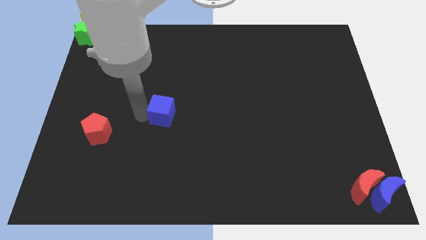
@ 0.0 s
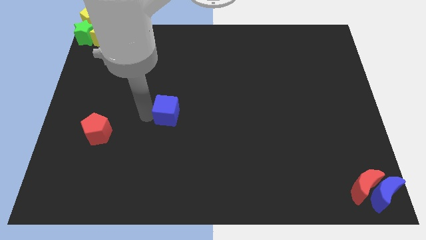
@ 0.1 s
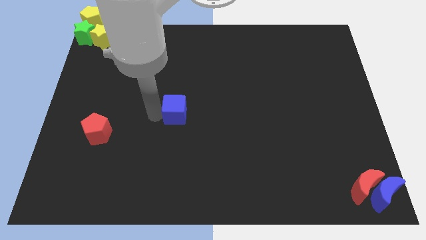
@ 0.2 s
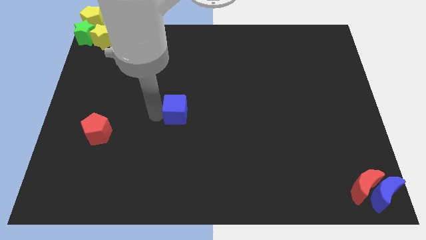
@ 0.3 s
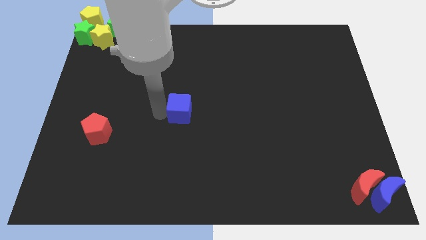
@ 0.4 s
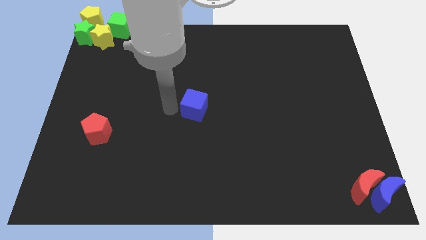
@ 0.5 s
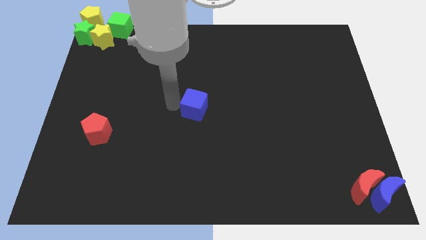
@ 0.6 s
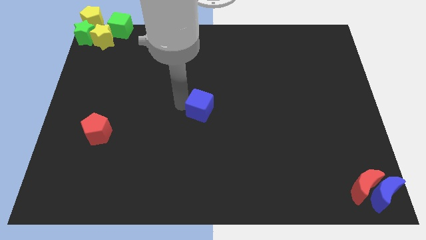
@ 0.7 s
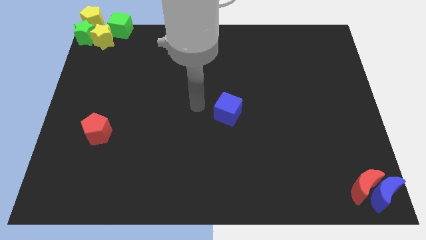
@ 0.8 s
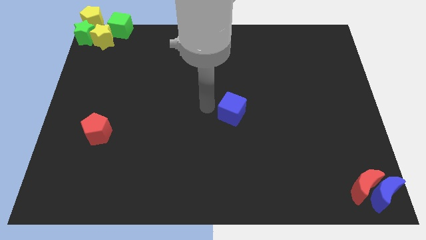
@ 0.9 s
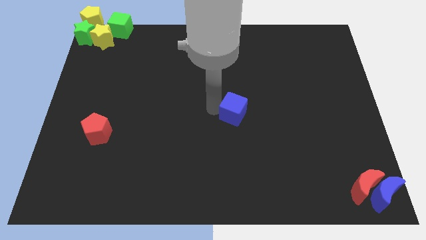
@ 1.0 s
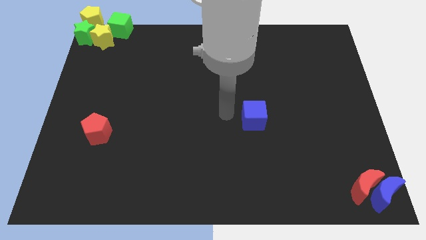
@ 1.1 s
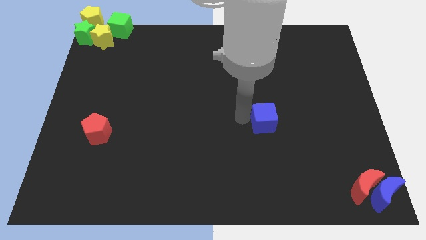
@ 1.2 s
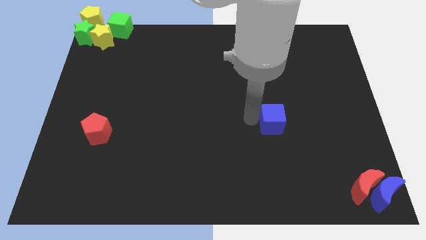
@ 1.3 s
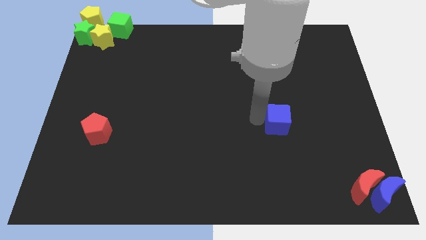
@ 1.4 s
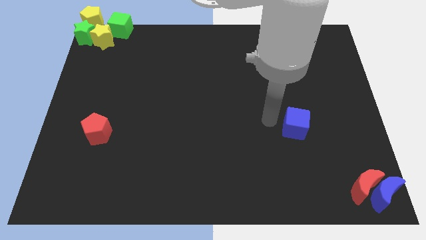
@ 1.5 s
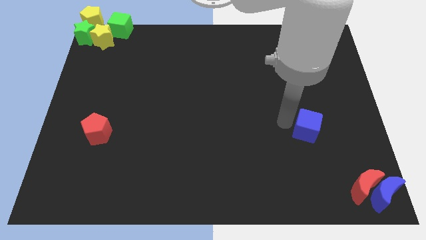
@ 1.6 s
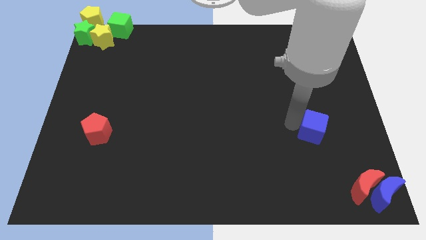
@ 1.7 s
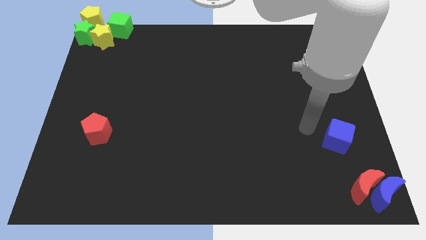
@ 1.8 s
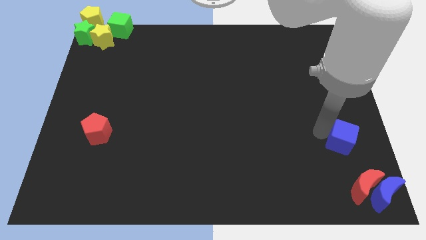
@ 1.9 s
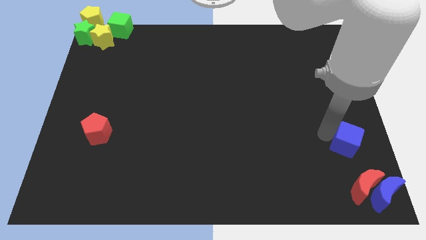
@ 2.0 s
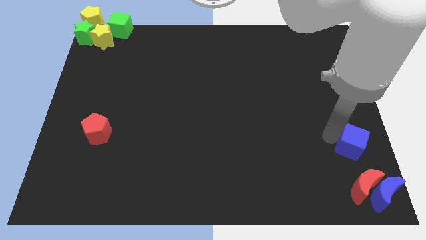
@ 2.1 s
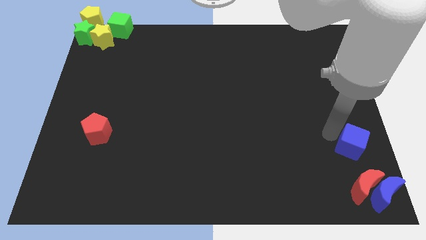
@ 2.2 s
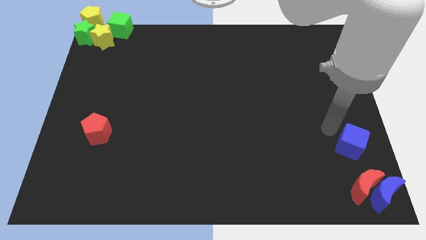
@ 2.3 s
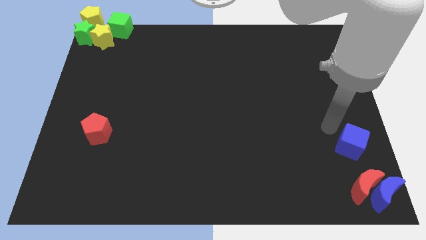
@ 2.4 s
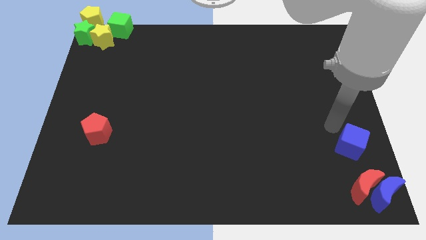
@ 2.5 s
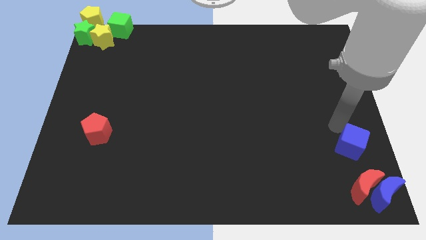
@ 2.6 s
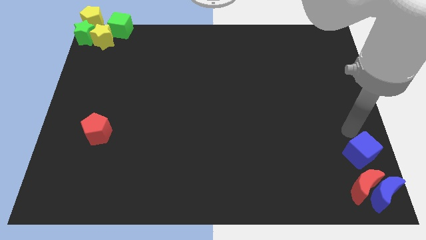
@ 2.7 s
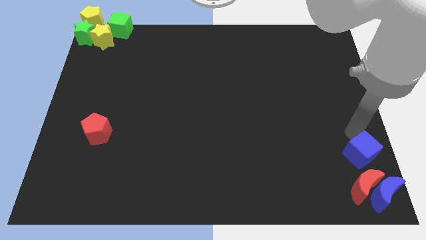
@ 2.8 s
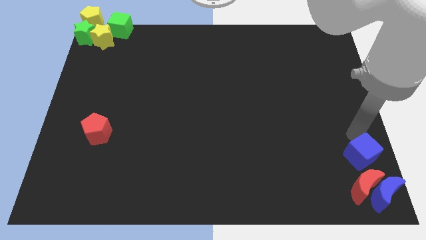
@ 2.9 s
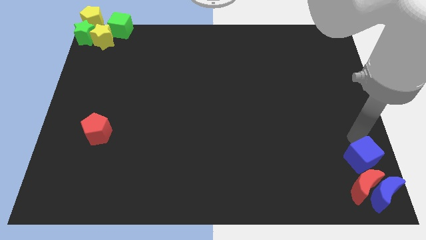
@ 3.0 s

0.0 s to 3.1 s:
push the blue cube to the top of the red crescent

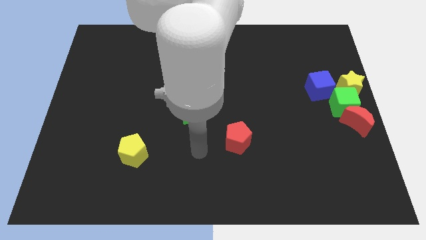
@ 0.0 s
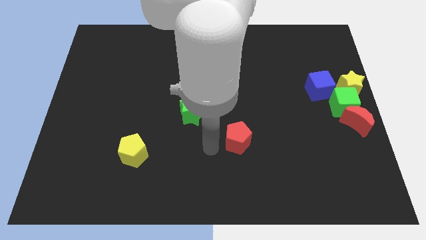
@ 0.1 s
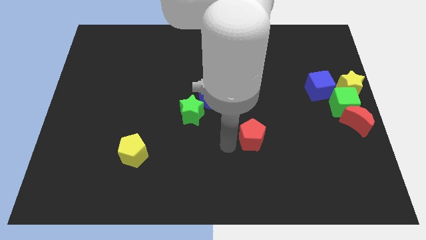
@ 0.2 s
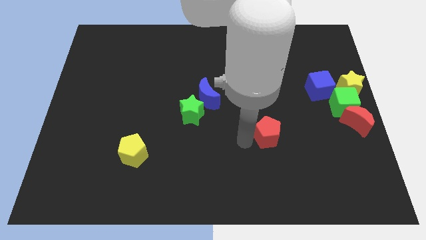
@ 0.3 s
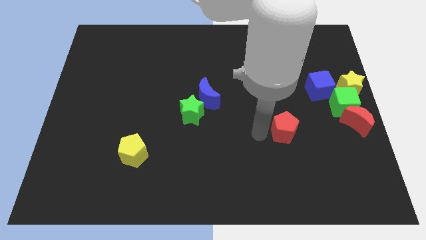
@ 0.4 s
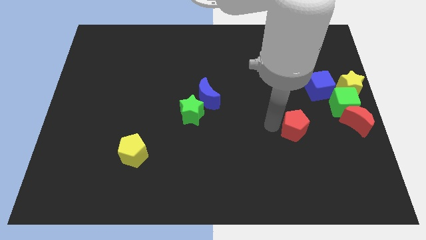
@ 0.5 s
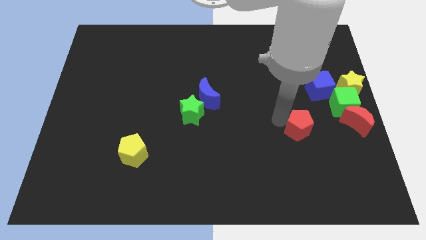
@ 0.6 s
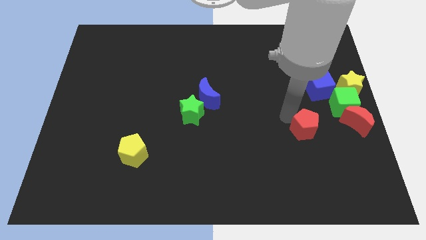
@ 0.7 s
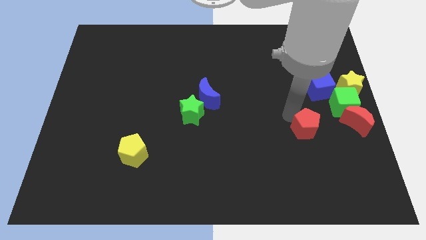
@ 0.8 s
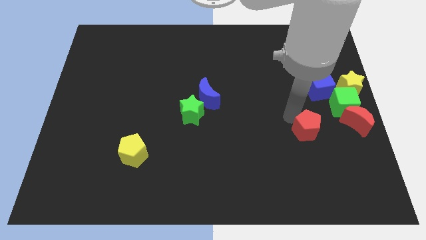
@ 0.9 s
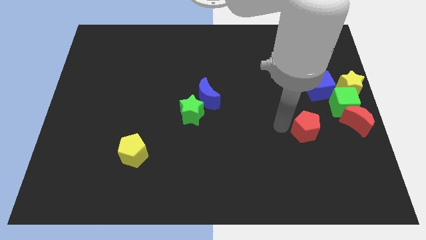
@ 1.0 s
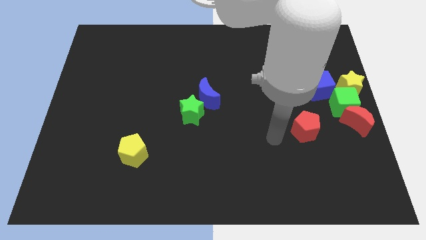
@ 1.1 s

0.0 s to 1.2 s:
move the red pentagon left to the red moon

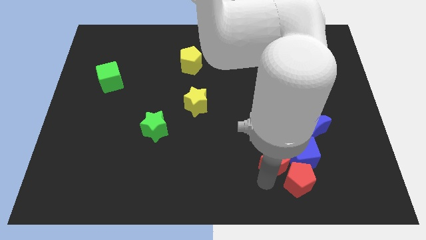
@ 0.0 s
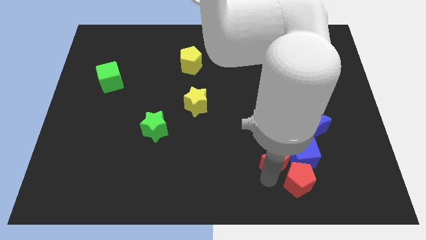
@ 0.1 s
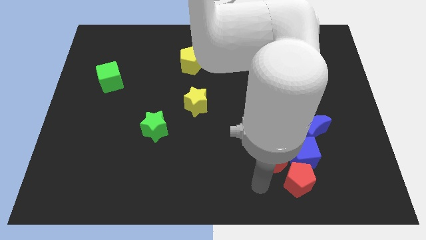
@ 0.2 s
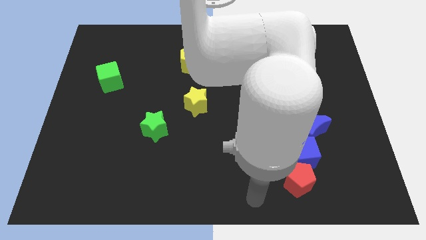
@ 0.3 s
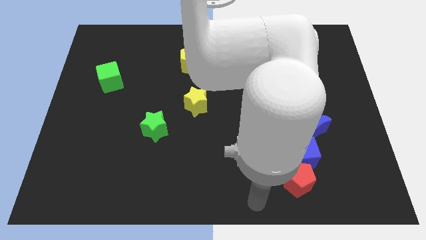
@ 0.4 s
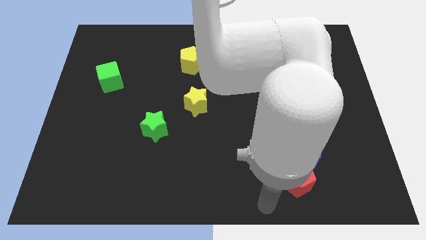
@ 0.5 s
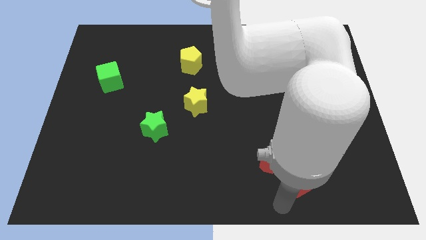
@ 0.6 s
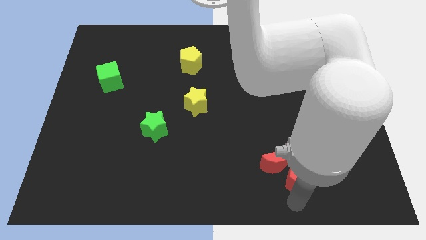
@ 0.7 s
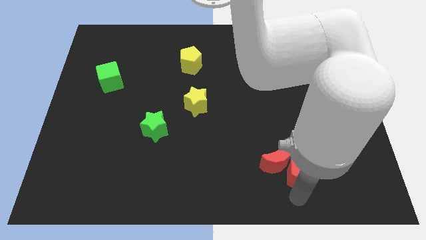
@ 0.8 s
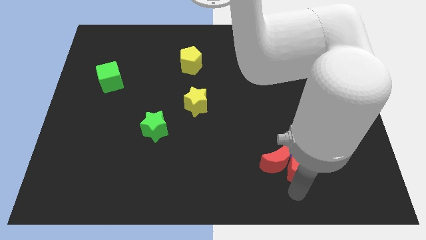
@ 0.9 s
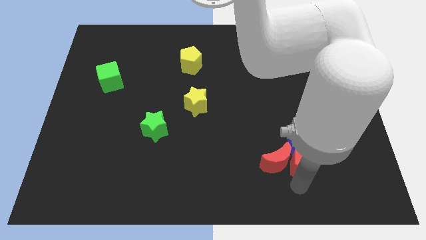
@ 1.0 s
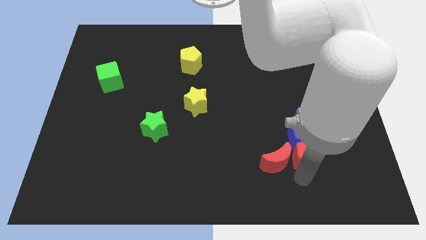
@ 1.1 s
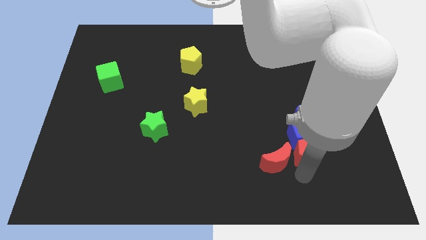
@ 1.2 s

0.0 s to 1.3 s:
move the red blocks towards the blue blocks

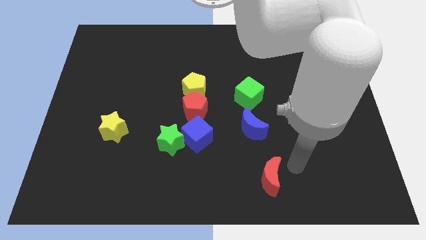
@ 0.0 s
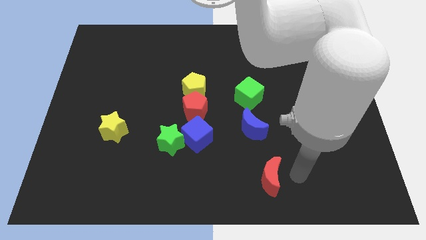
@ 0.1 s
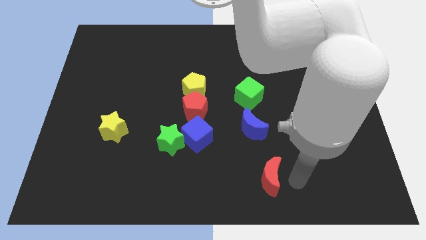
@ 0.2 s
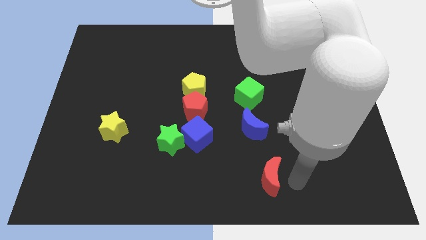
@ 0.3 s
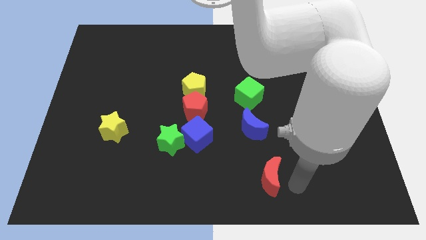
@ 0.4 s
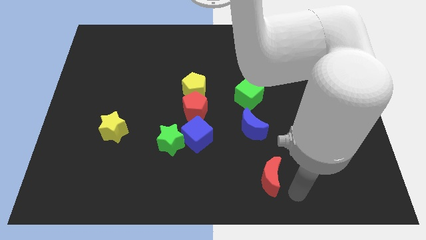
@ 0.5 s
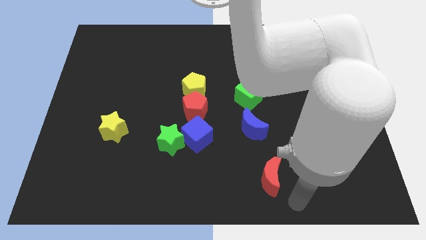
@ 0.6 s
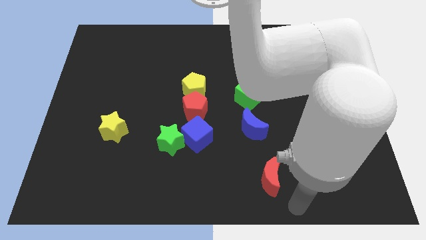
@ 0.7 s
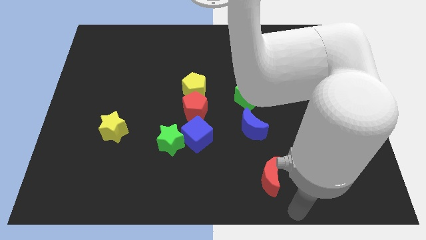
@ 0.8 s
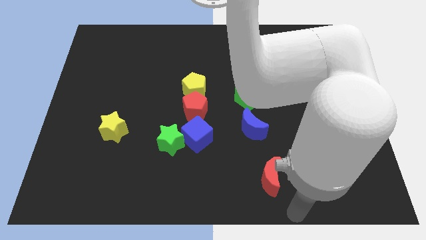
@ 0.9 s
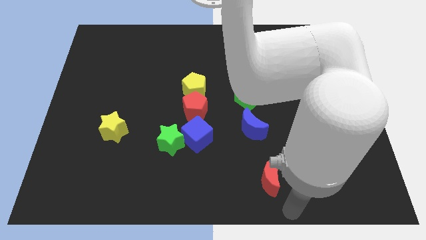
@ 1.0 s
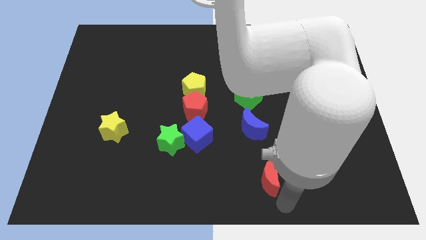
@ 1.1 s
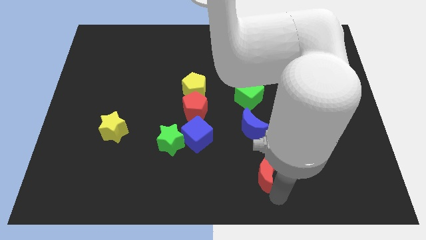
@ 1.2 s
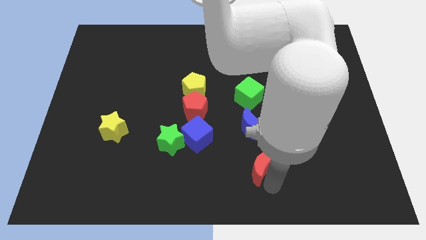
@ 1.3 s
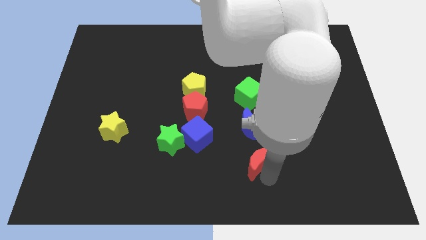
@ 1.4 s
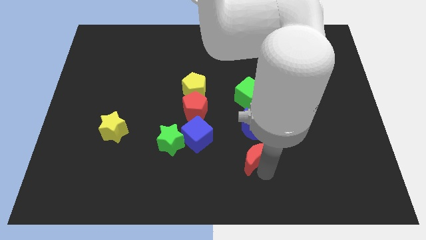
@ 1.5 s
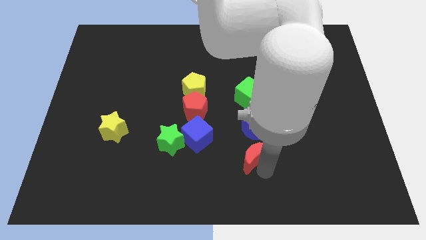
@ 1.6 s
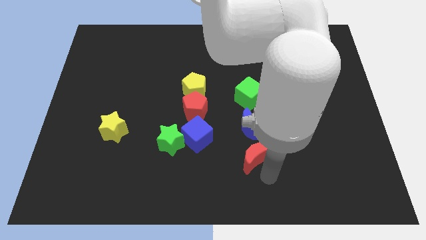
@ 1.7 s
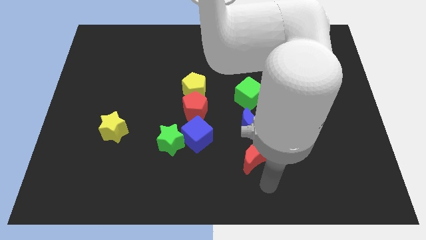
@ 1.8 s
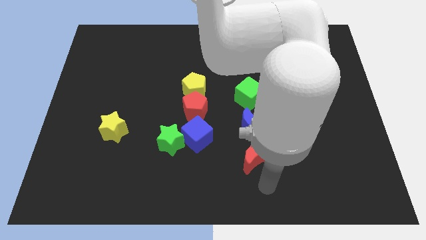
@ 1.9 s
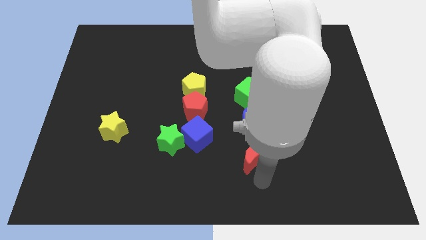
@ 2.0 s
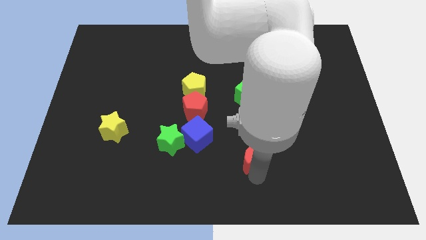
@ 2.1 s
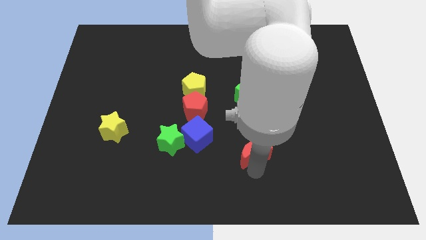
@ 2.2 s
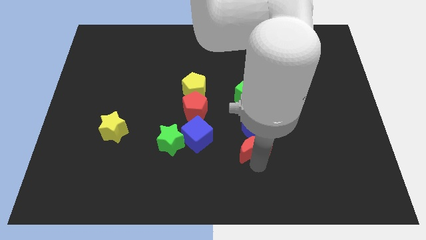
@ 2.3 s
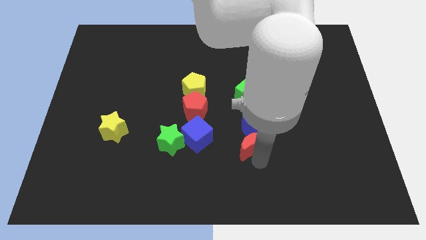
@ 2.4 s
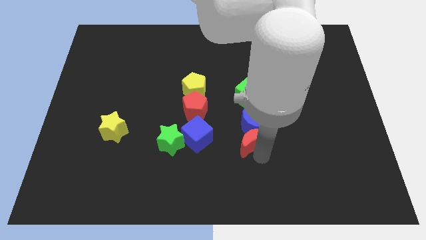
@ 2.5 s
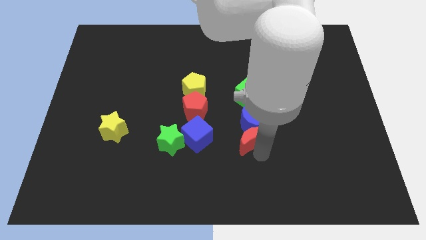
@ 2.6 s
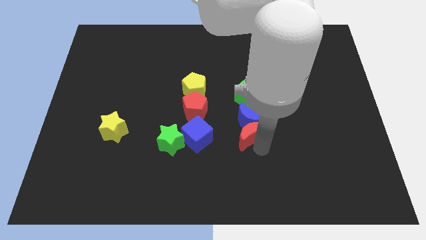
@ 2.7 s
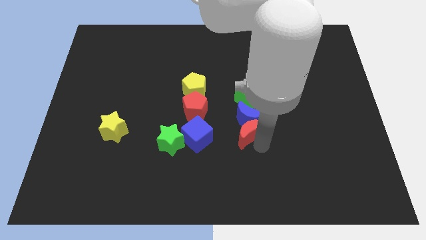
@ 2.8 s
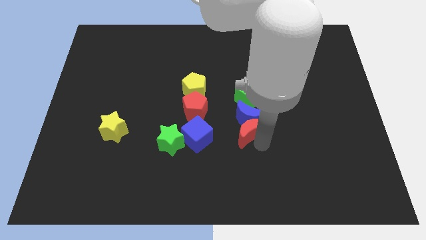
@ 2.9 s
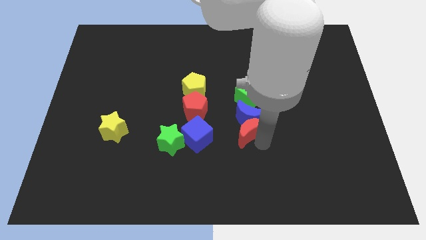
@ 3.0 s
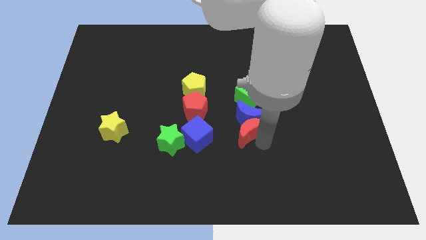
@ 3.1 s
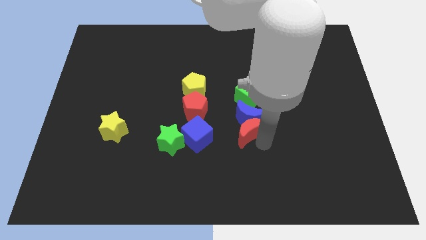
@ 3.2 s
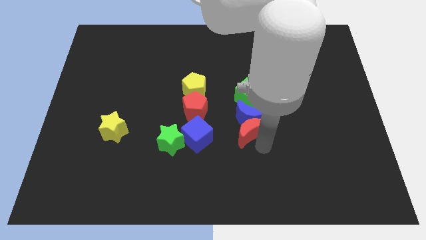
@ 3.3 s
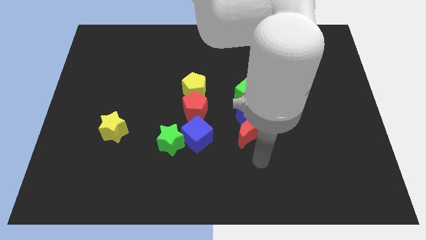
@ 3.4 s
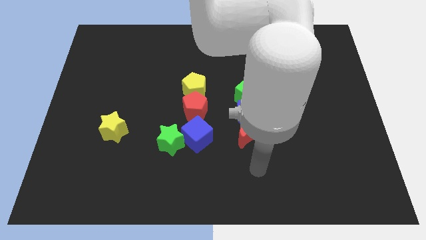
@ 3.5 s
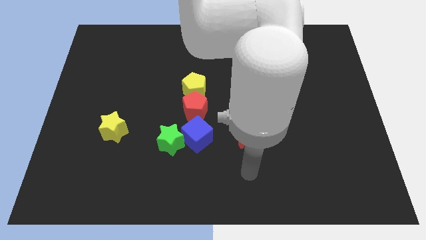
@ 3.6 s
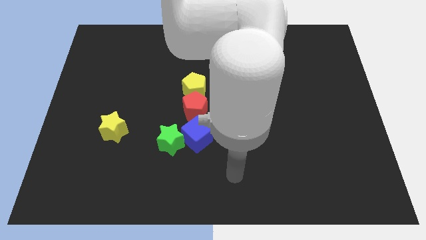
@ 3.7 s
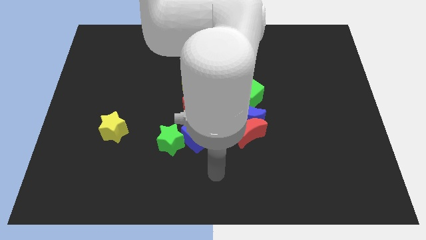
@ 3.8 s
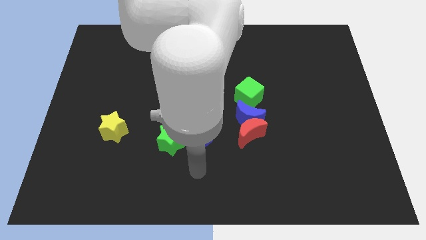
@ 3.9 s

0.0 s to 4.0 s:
move the red moon and blue moon towards top side
